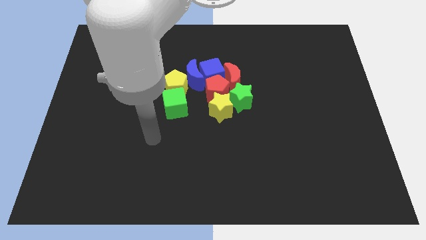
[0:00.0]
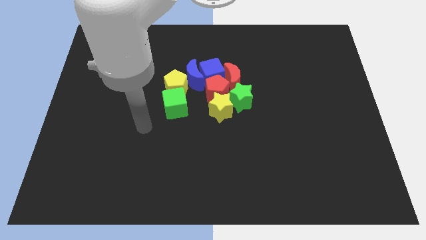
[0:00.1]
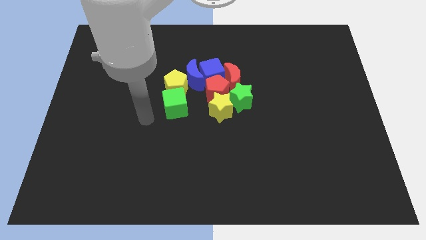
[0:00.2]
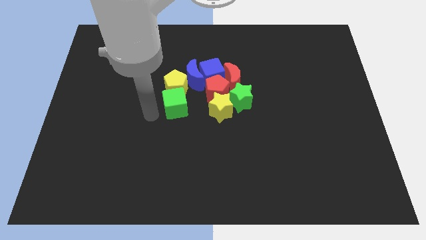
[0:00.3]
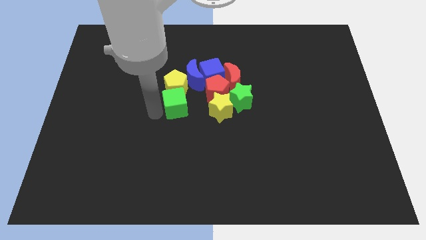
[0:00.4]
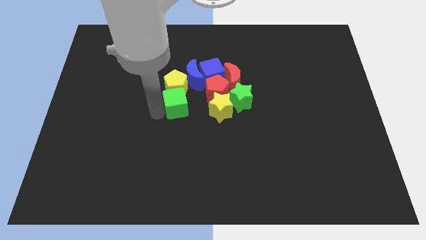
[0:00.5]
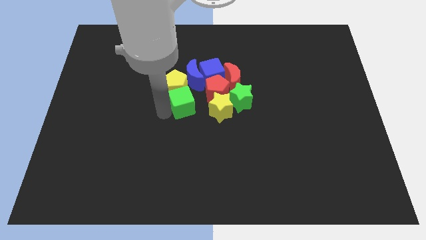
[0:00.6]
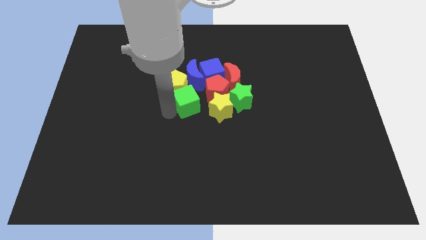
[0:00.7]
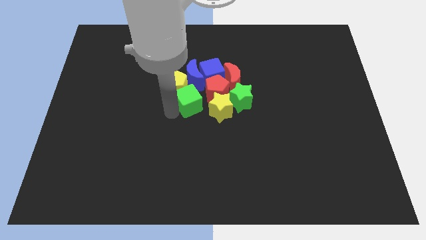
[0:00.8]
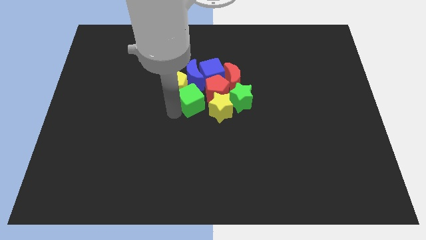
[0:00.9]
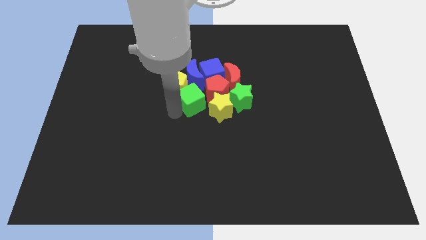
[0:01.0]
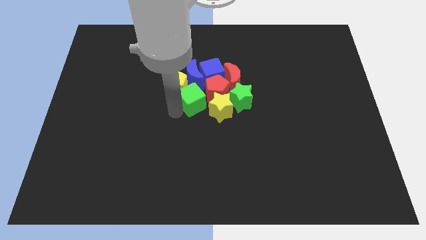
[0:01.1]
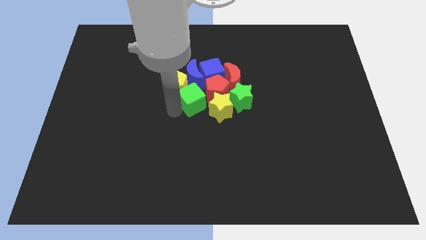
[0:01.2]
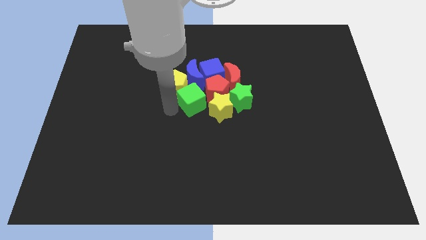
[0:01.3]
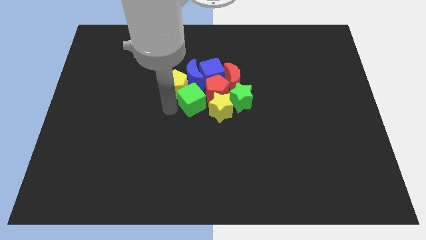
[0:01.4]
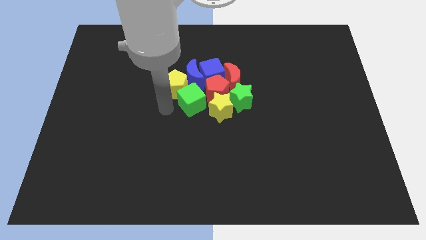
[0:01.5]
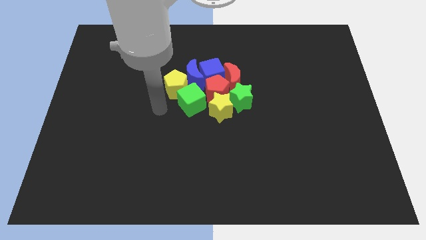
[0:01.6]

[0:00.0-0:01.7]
push the green cube into the group of blocks

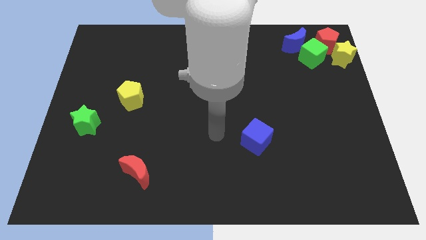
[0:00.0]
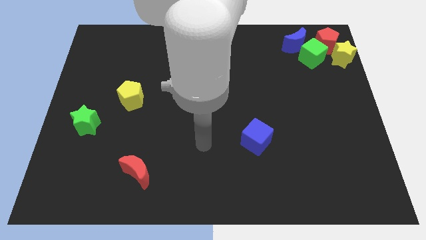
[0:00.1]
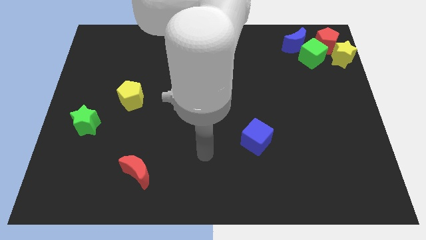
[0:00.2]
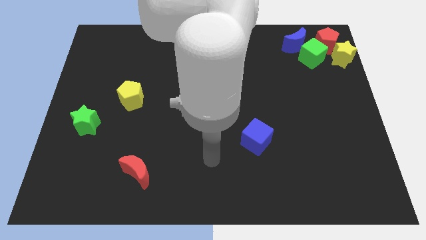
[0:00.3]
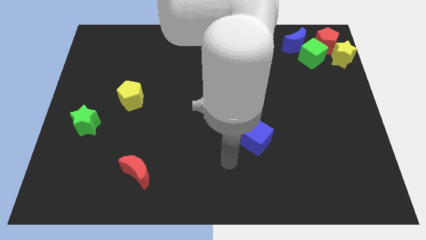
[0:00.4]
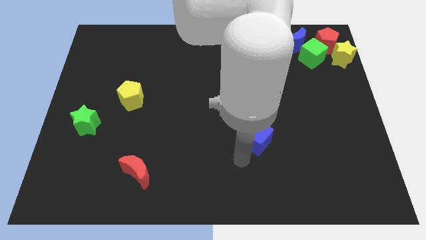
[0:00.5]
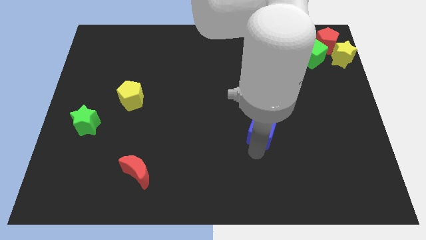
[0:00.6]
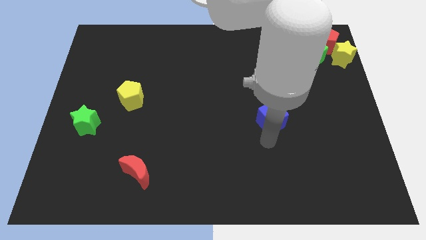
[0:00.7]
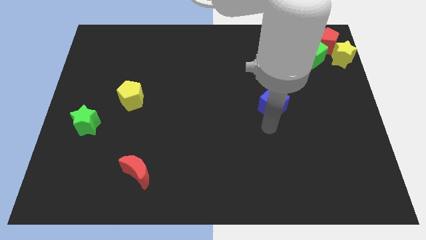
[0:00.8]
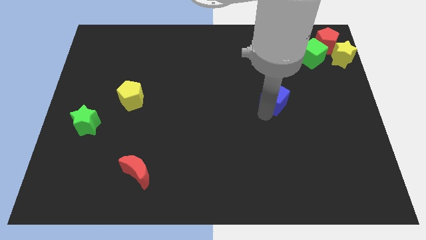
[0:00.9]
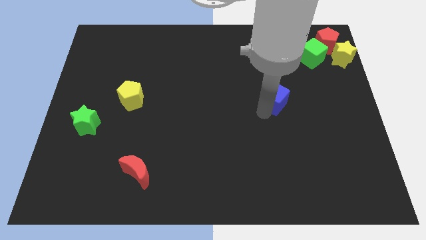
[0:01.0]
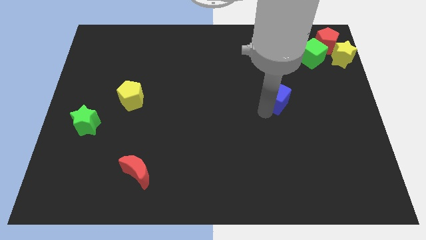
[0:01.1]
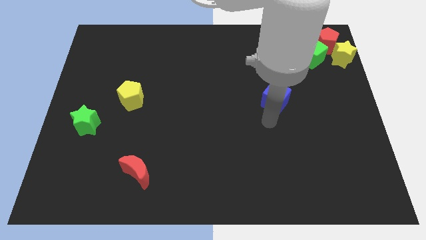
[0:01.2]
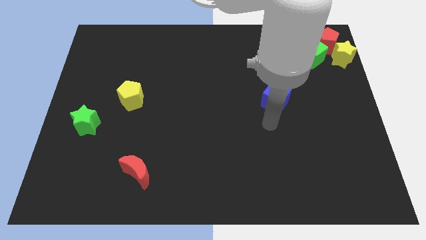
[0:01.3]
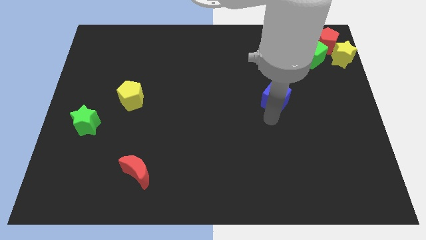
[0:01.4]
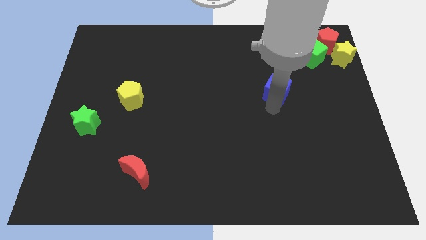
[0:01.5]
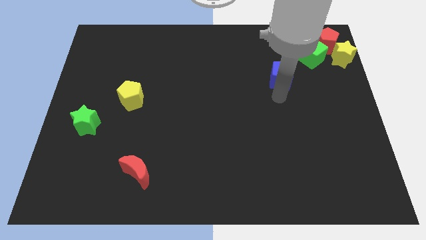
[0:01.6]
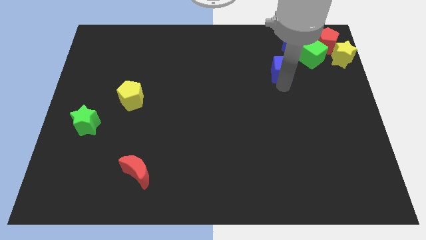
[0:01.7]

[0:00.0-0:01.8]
move the blue cube towards the green cube

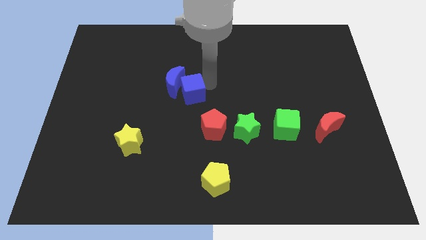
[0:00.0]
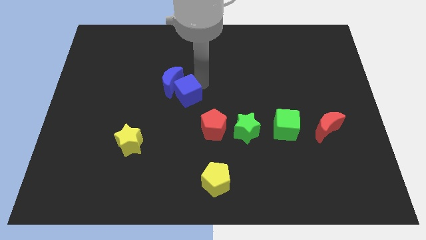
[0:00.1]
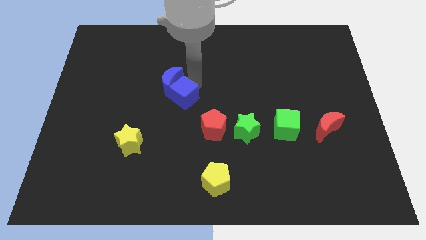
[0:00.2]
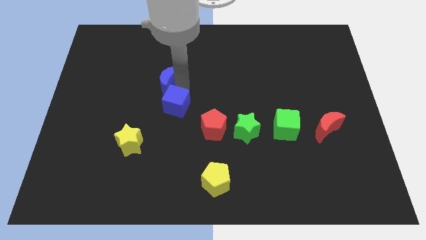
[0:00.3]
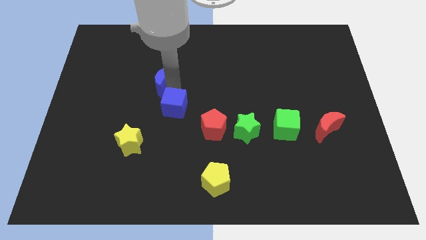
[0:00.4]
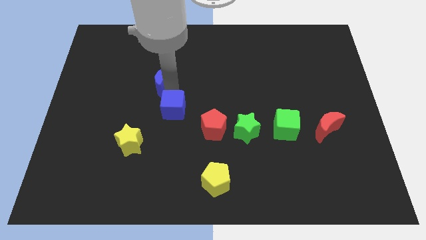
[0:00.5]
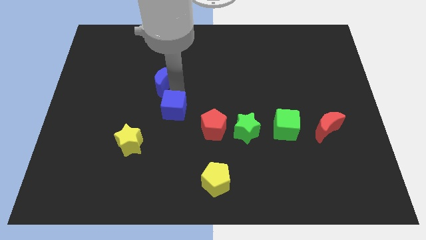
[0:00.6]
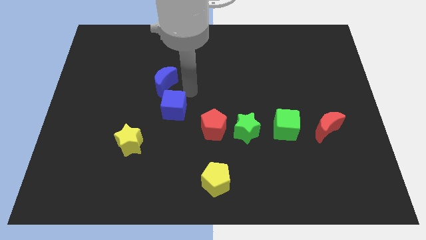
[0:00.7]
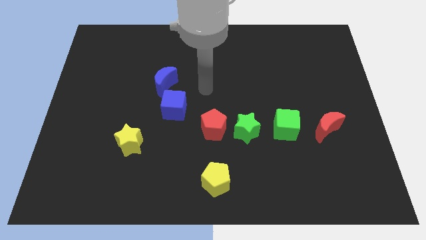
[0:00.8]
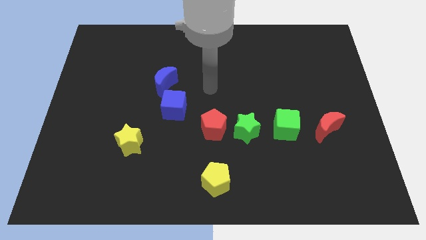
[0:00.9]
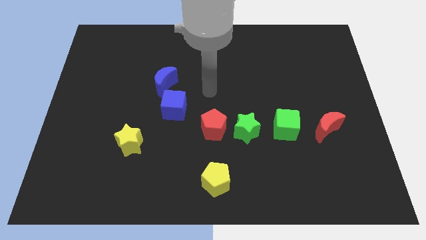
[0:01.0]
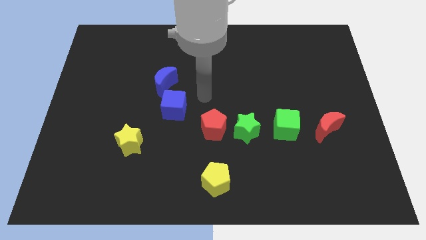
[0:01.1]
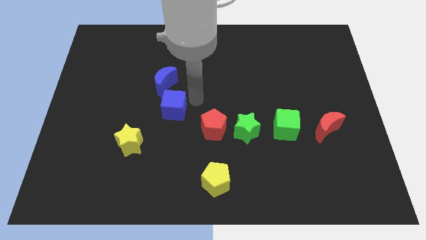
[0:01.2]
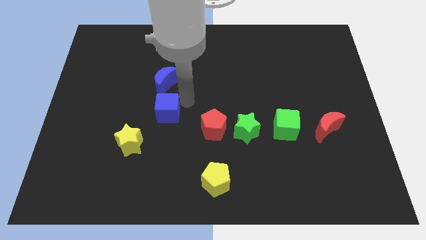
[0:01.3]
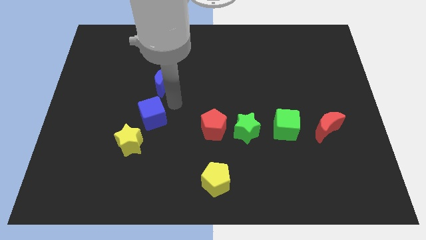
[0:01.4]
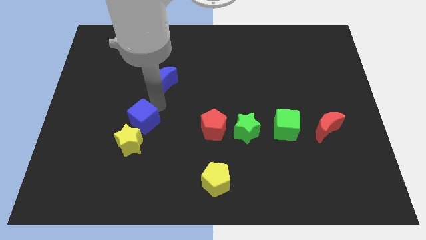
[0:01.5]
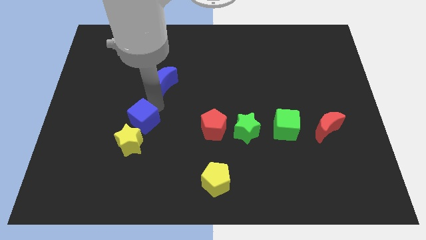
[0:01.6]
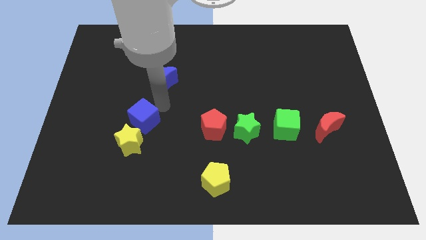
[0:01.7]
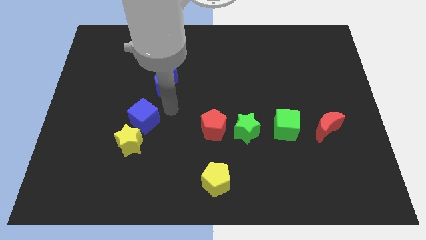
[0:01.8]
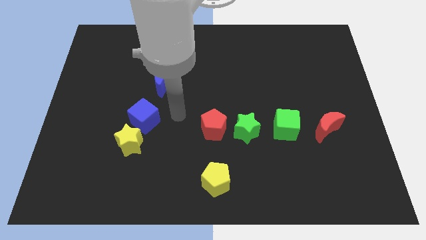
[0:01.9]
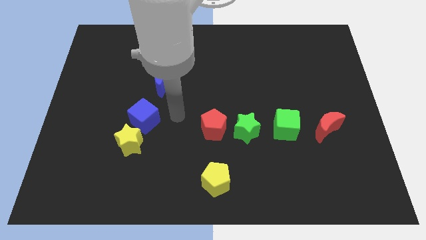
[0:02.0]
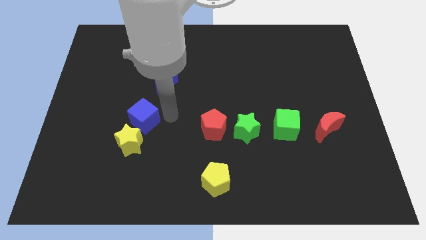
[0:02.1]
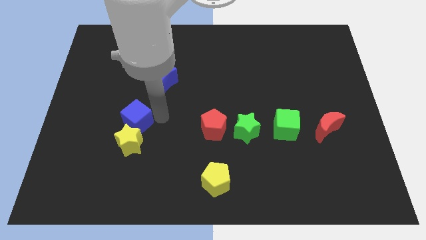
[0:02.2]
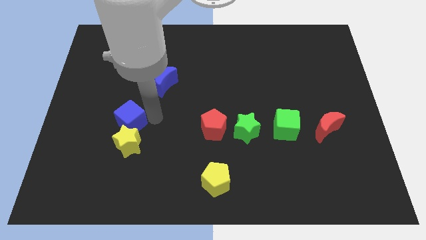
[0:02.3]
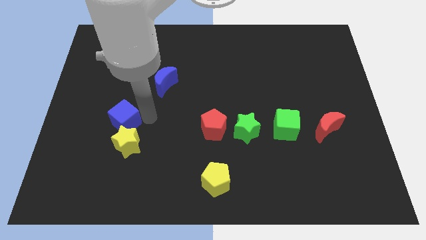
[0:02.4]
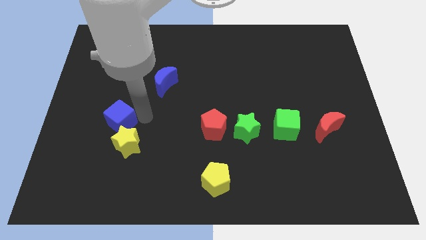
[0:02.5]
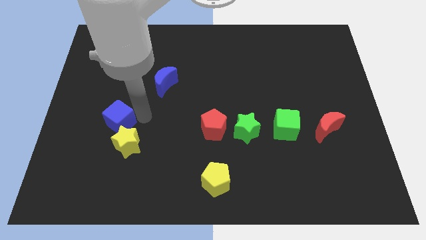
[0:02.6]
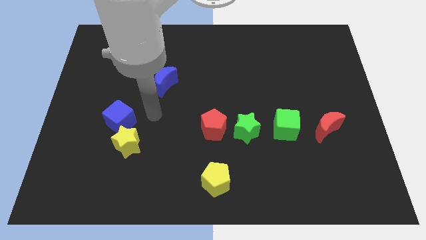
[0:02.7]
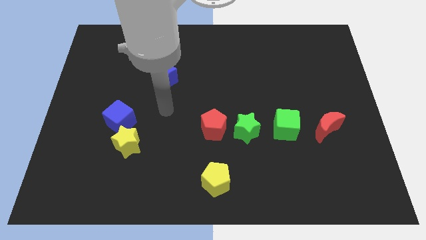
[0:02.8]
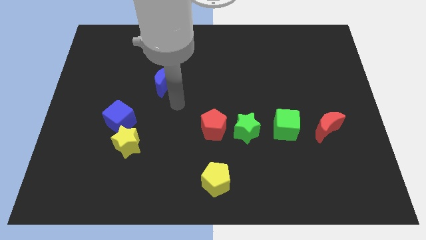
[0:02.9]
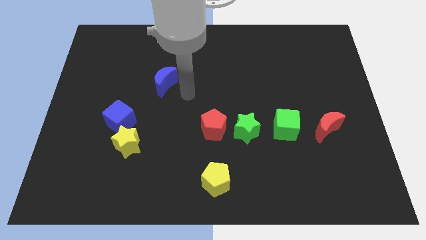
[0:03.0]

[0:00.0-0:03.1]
move the blue cube to the top of the yellow star

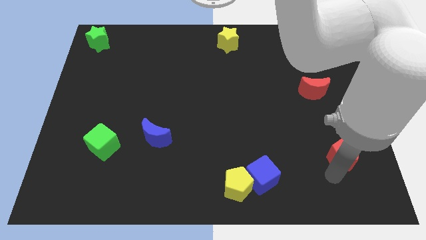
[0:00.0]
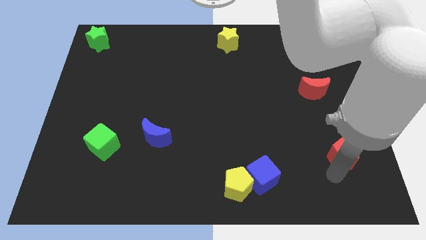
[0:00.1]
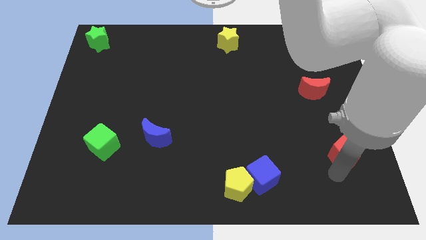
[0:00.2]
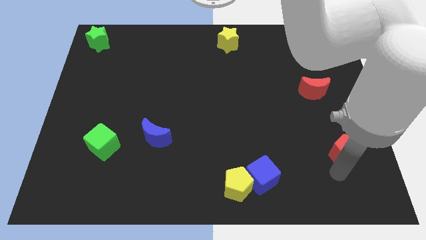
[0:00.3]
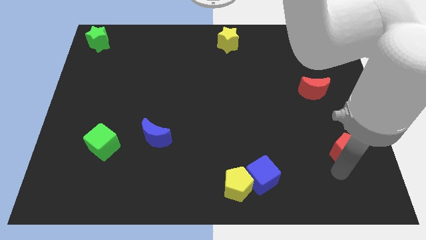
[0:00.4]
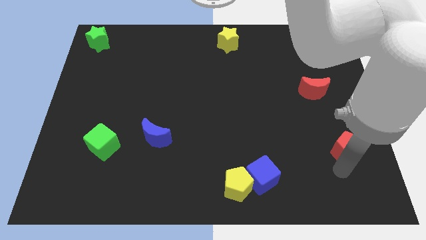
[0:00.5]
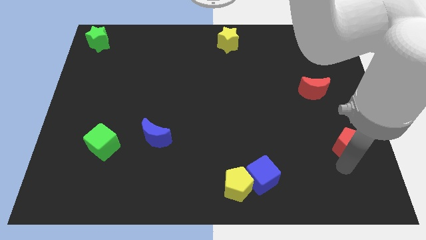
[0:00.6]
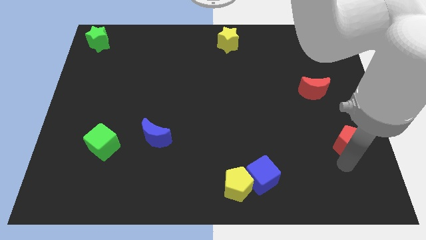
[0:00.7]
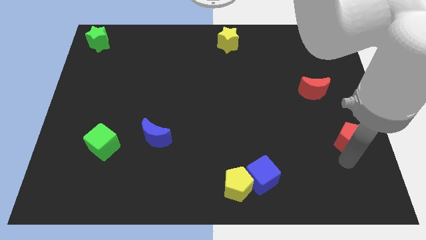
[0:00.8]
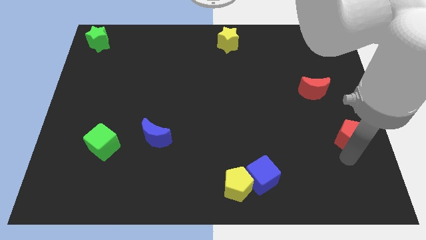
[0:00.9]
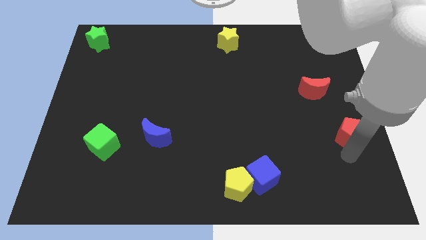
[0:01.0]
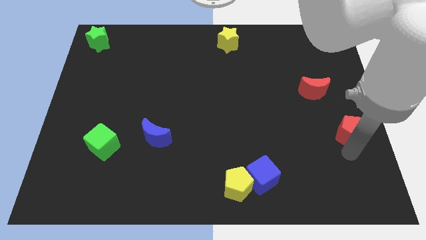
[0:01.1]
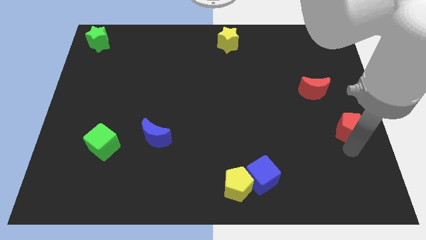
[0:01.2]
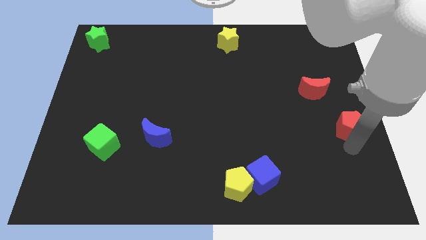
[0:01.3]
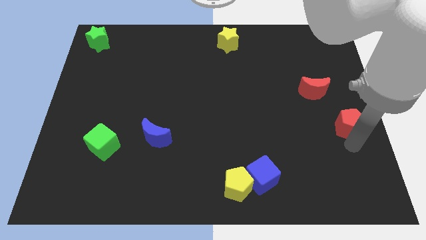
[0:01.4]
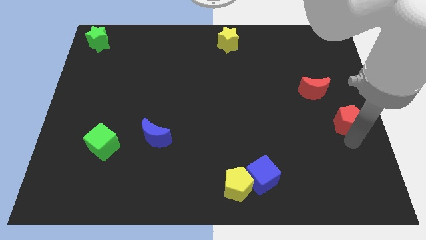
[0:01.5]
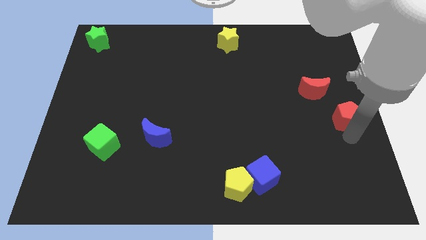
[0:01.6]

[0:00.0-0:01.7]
move the red pentagon upwards

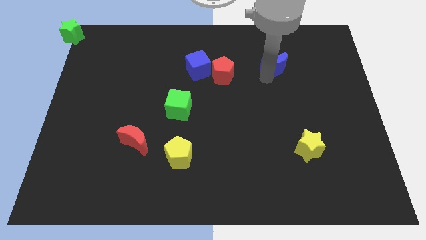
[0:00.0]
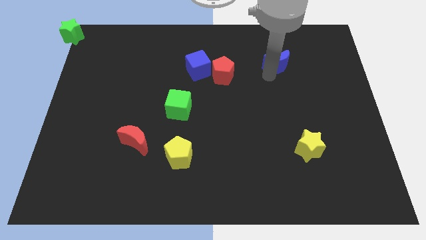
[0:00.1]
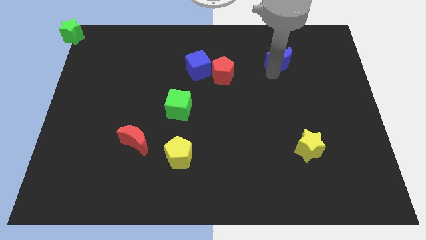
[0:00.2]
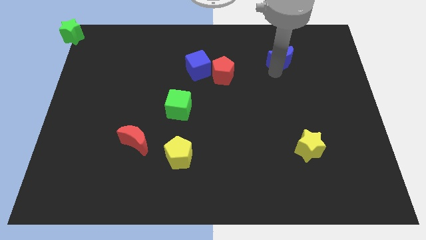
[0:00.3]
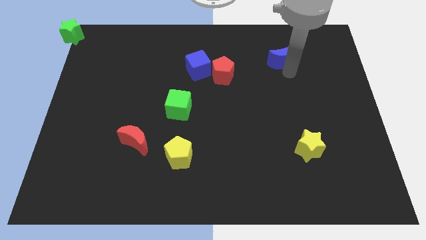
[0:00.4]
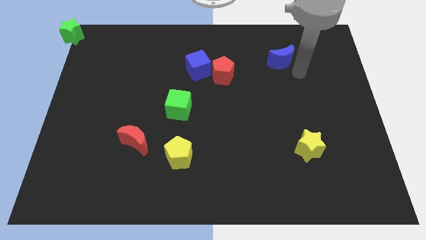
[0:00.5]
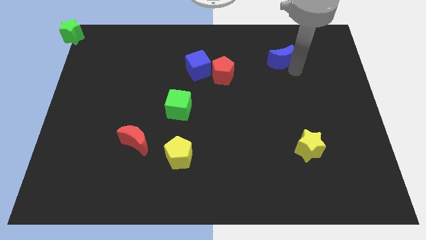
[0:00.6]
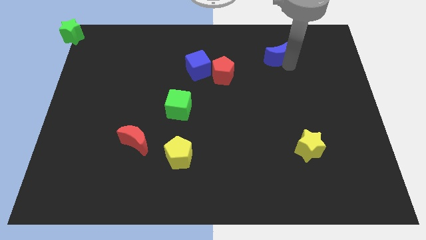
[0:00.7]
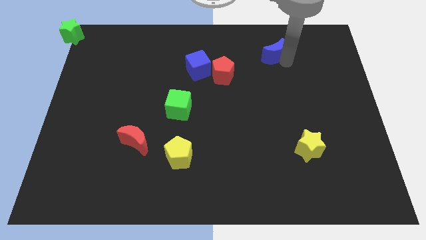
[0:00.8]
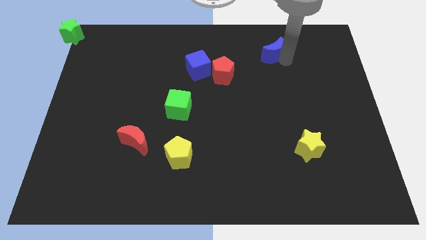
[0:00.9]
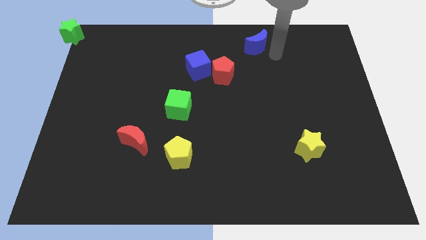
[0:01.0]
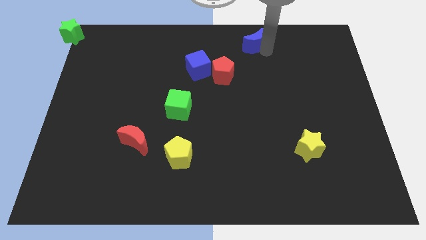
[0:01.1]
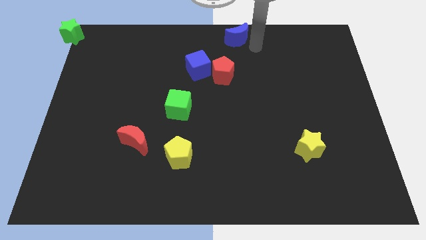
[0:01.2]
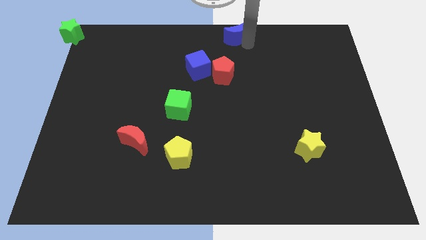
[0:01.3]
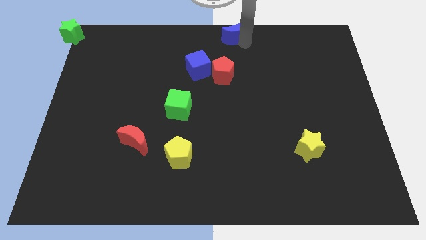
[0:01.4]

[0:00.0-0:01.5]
move the blue crescent to the top center of the board
